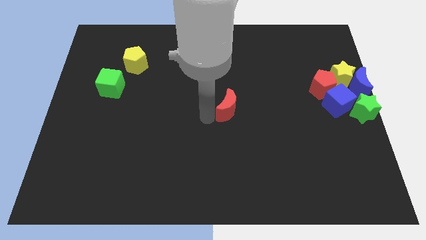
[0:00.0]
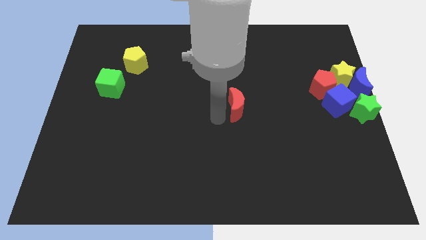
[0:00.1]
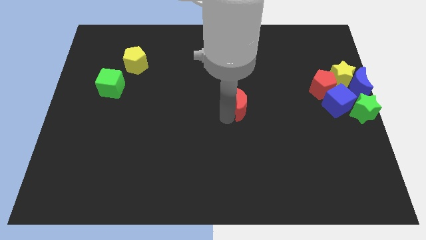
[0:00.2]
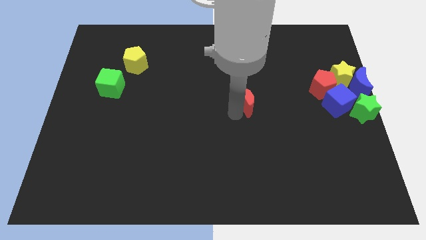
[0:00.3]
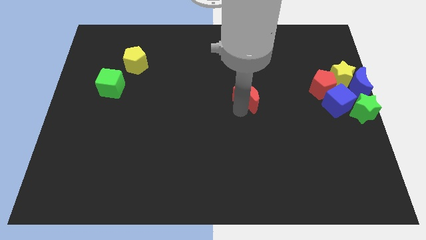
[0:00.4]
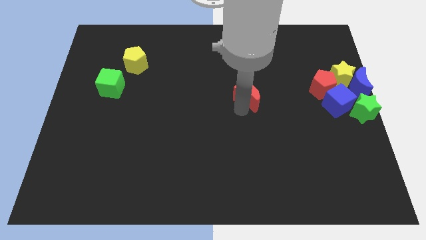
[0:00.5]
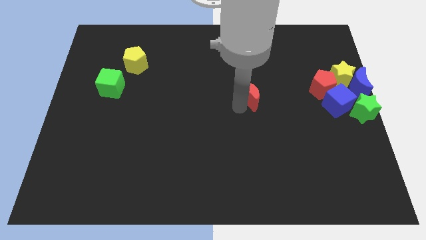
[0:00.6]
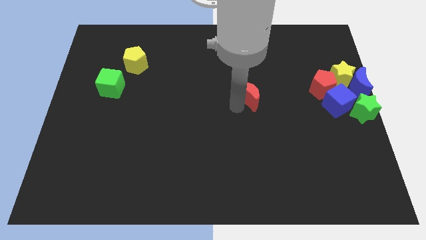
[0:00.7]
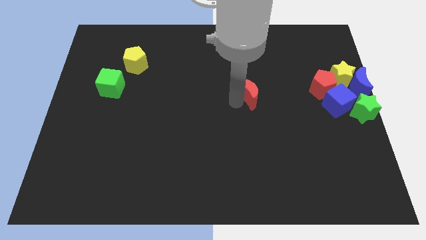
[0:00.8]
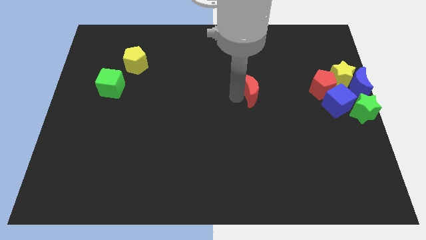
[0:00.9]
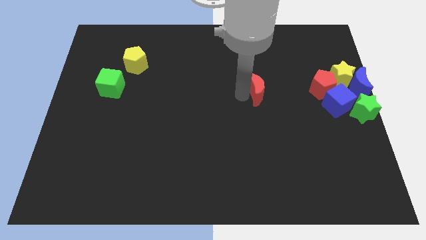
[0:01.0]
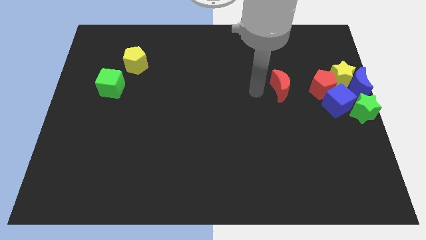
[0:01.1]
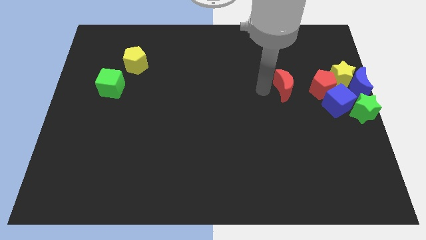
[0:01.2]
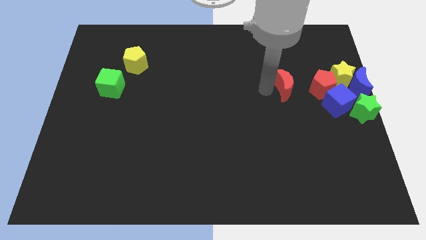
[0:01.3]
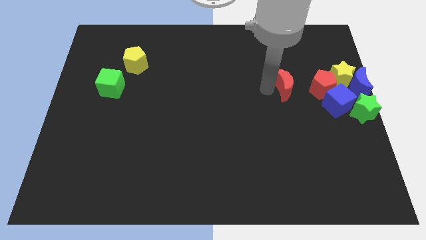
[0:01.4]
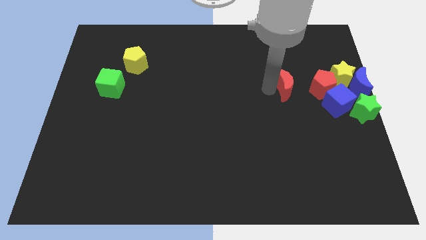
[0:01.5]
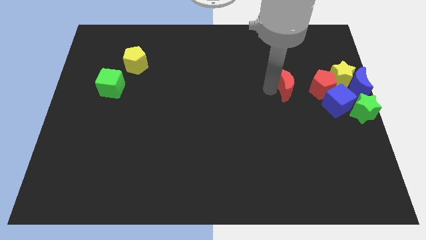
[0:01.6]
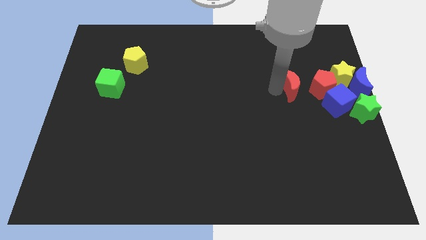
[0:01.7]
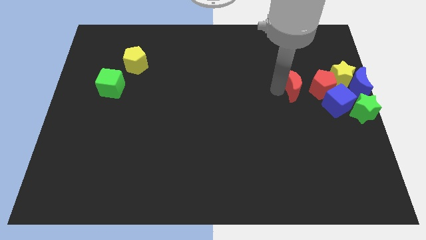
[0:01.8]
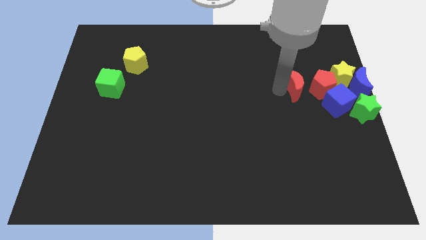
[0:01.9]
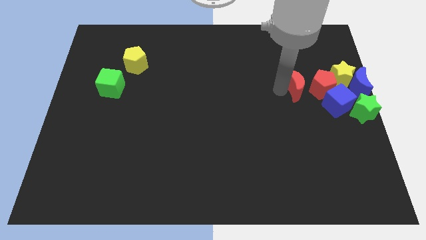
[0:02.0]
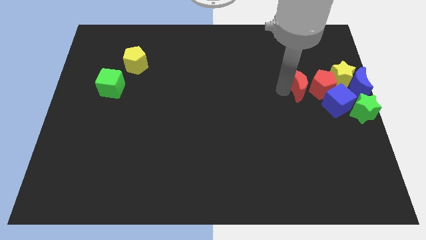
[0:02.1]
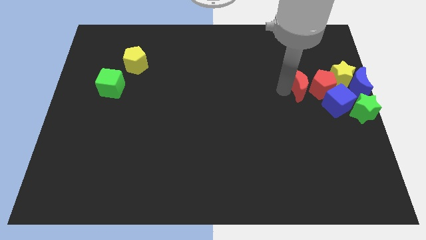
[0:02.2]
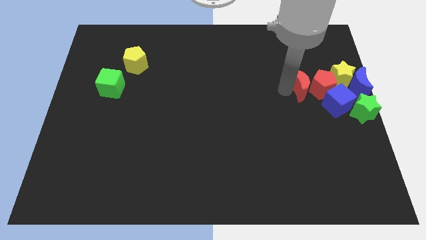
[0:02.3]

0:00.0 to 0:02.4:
push the red crescent to the left of the red pentagon

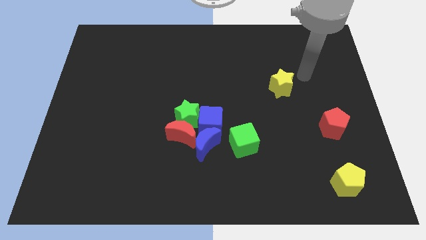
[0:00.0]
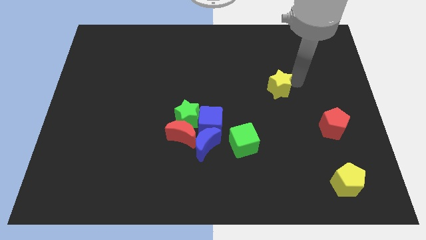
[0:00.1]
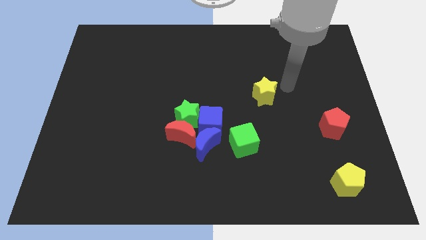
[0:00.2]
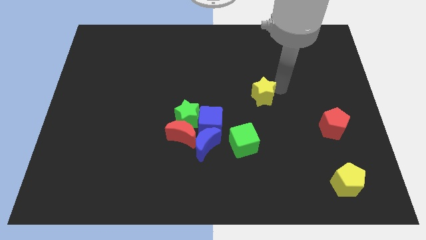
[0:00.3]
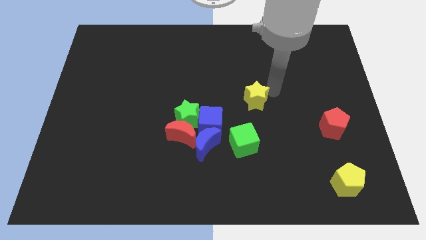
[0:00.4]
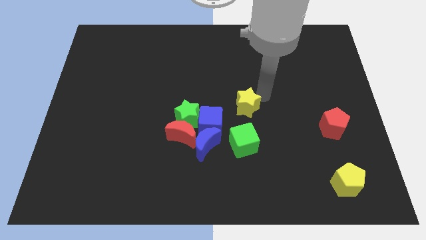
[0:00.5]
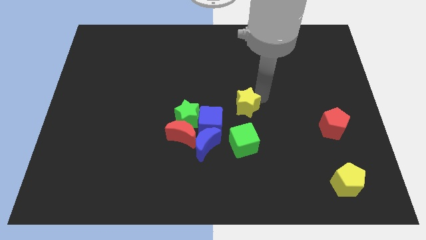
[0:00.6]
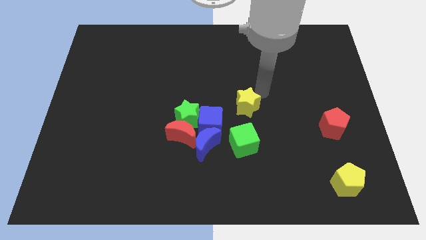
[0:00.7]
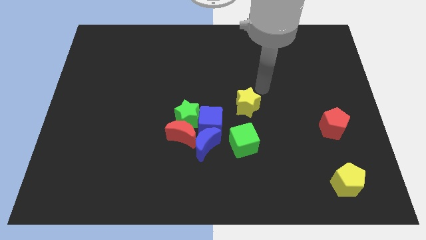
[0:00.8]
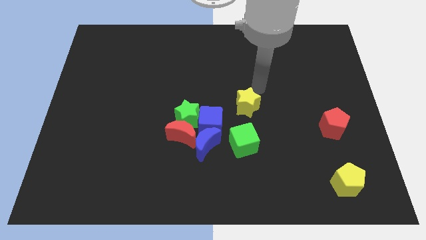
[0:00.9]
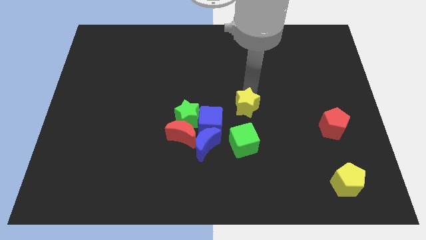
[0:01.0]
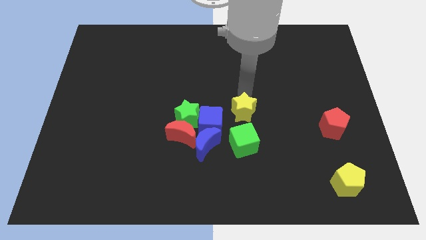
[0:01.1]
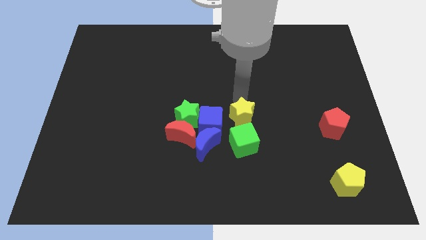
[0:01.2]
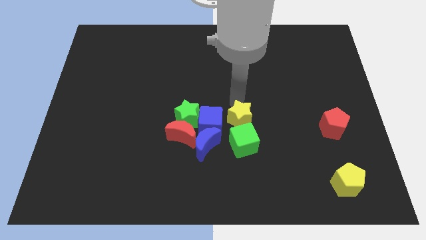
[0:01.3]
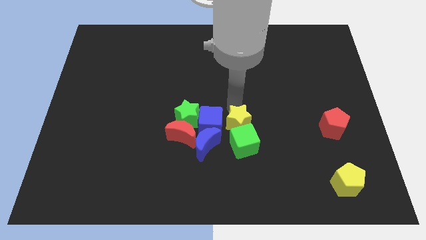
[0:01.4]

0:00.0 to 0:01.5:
move the yellow star above the green cube

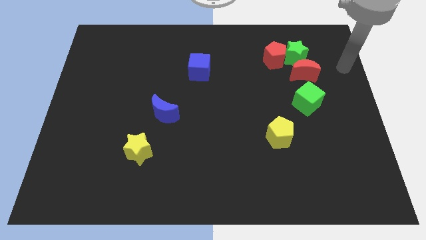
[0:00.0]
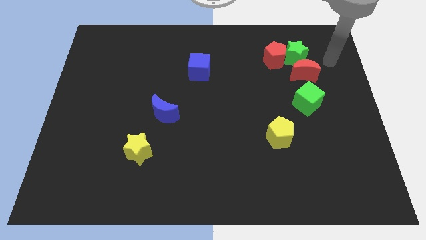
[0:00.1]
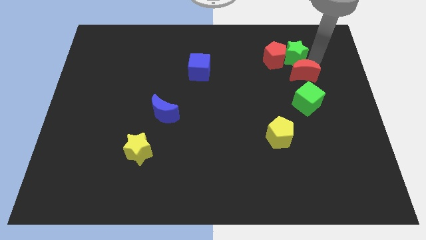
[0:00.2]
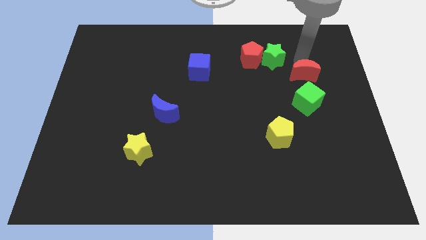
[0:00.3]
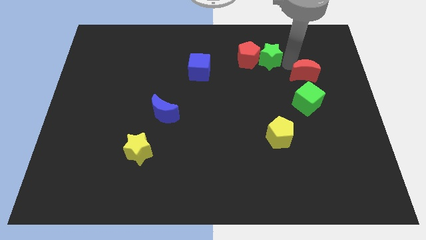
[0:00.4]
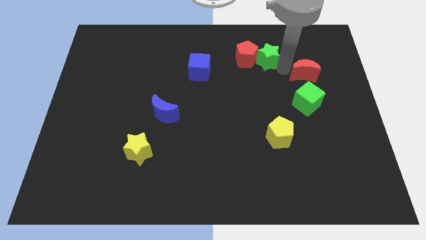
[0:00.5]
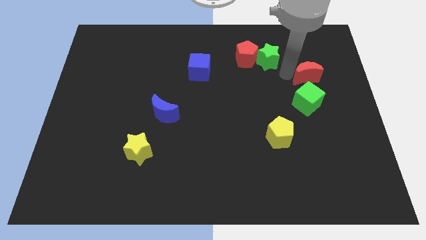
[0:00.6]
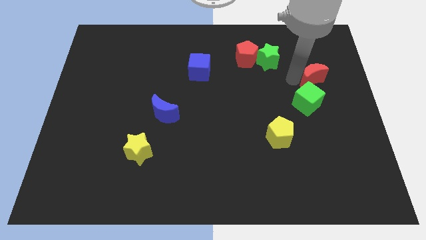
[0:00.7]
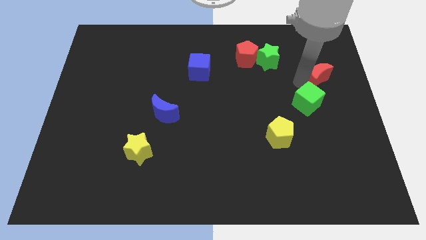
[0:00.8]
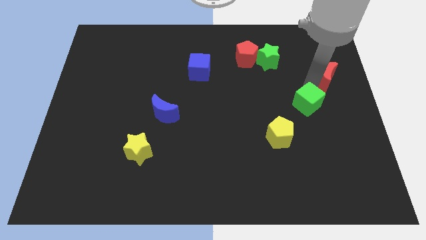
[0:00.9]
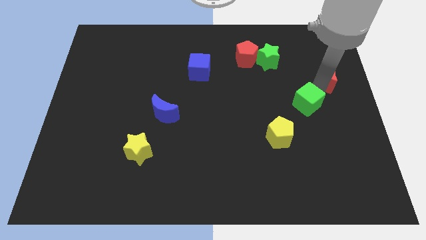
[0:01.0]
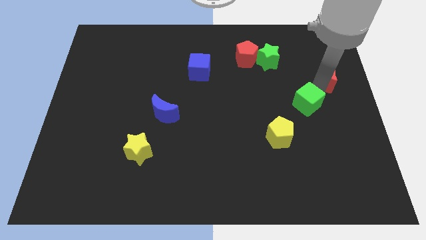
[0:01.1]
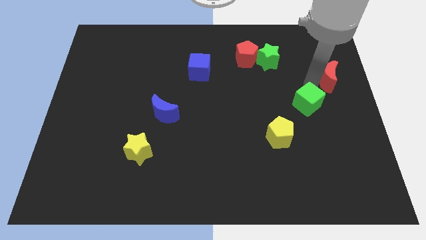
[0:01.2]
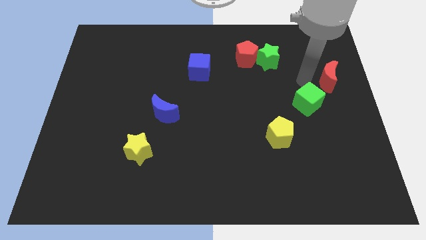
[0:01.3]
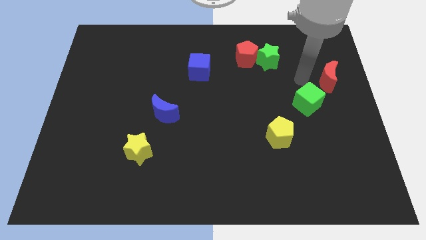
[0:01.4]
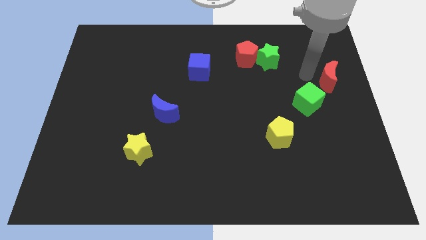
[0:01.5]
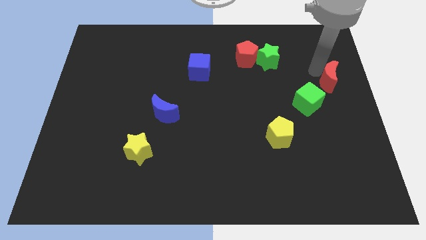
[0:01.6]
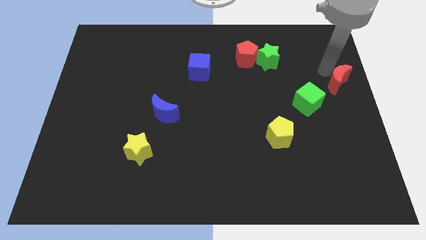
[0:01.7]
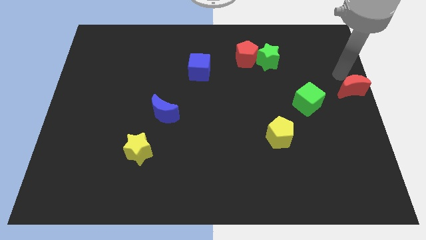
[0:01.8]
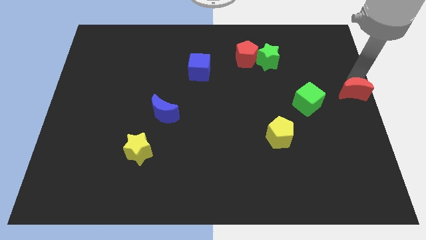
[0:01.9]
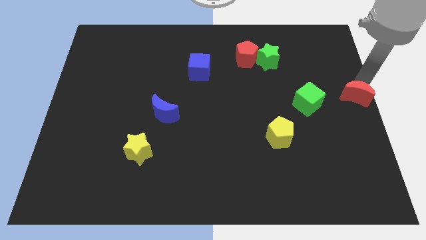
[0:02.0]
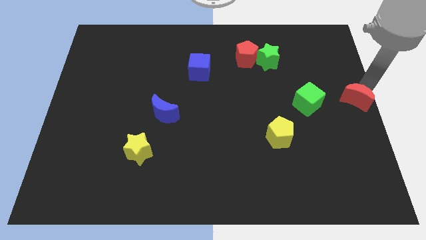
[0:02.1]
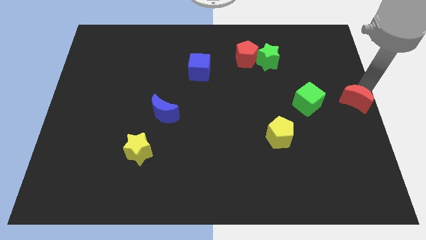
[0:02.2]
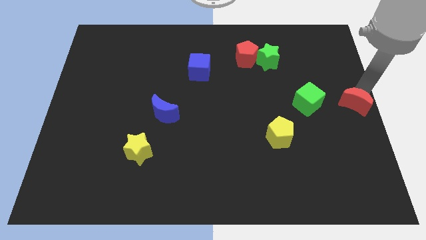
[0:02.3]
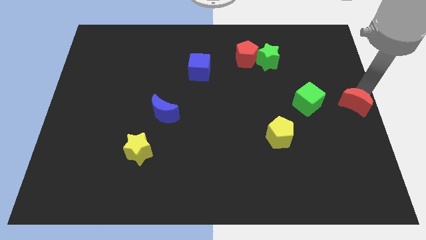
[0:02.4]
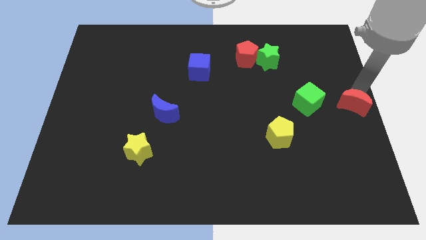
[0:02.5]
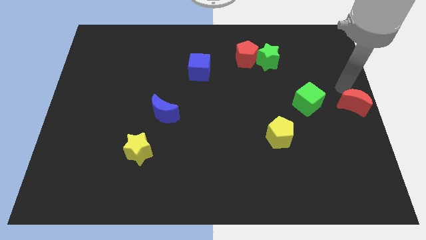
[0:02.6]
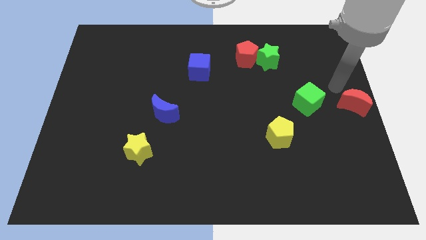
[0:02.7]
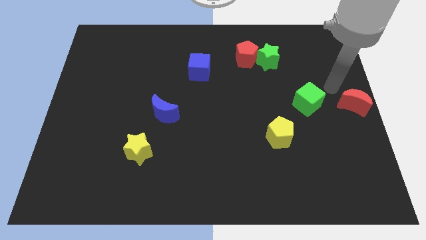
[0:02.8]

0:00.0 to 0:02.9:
place red crescent on center right

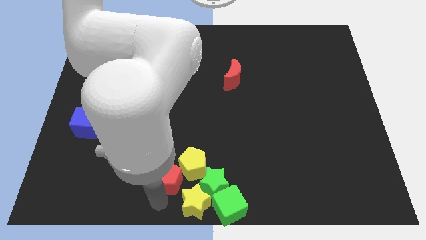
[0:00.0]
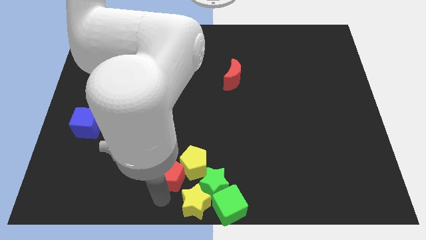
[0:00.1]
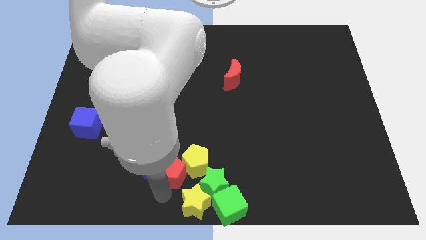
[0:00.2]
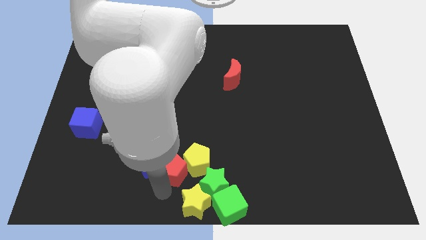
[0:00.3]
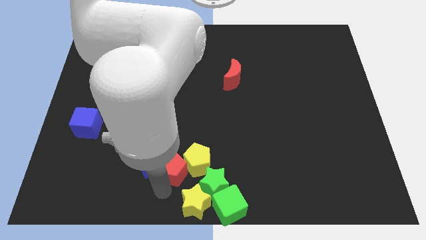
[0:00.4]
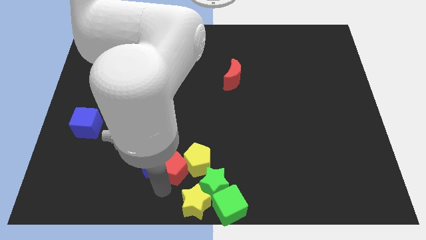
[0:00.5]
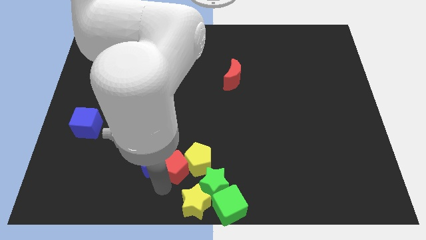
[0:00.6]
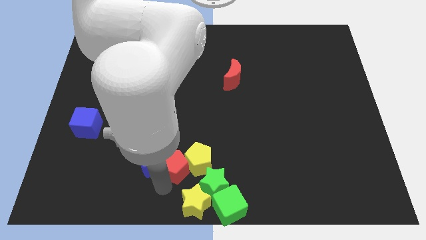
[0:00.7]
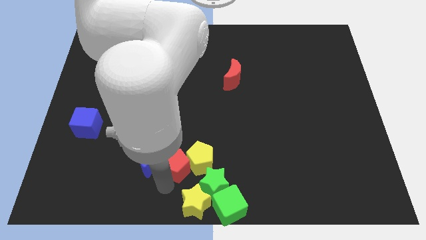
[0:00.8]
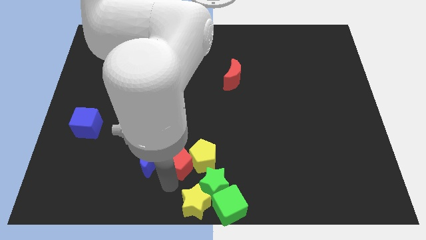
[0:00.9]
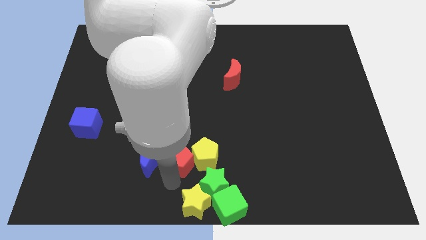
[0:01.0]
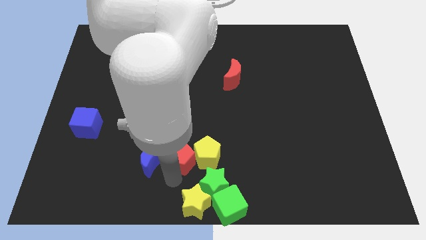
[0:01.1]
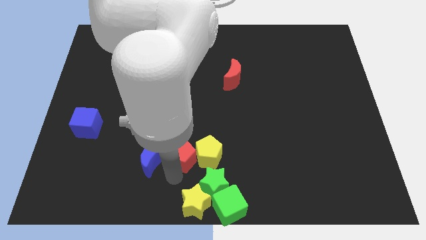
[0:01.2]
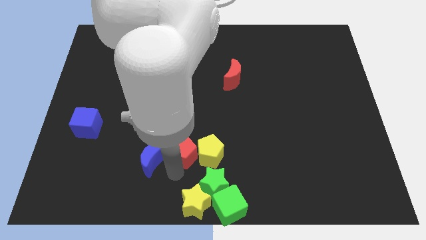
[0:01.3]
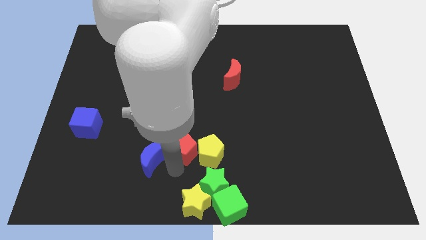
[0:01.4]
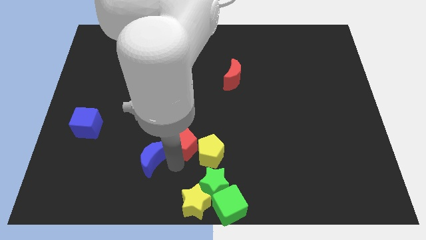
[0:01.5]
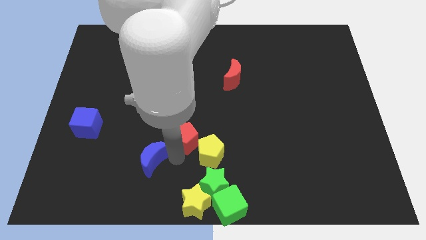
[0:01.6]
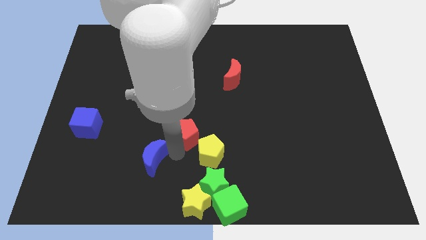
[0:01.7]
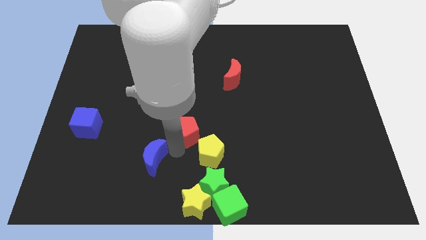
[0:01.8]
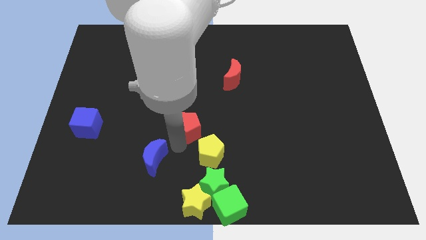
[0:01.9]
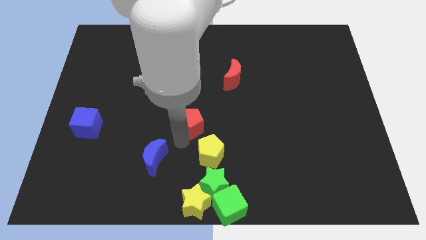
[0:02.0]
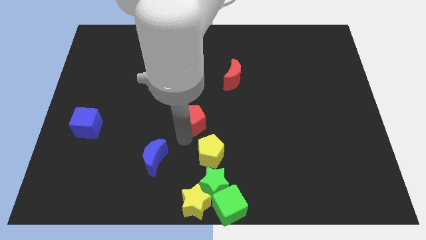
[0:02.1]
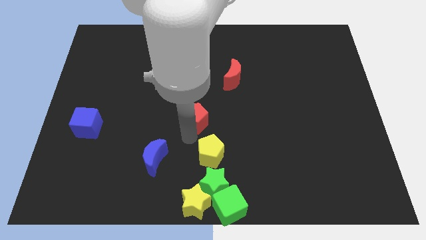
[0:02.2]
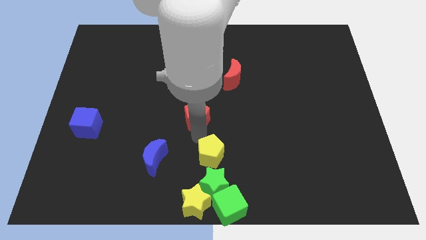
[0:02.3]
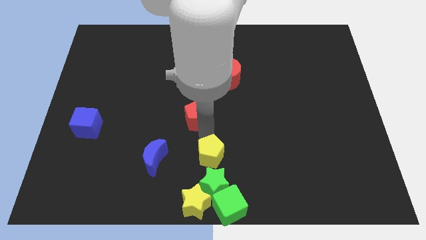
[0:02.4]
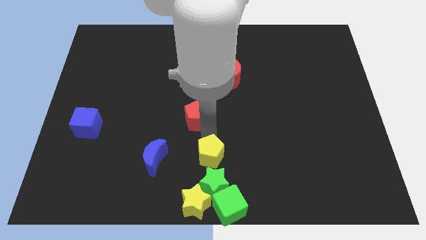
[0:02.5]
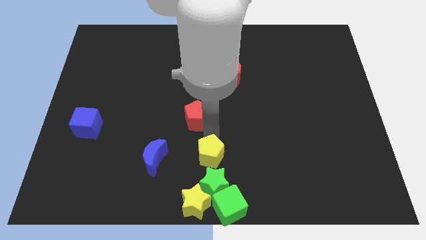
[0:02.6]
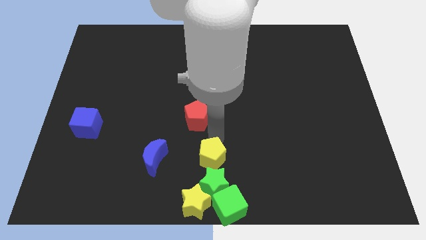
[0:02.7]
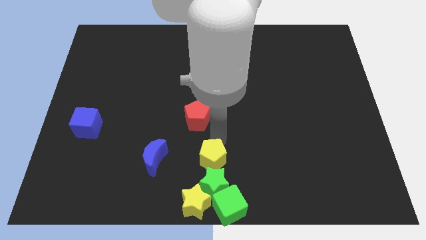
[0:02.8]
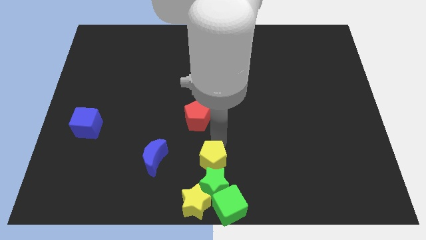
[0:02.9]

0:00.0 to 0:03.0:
place the red pentagon to the center of the board
